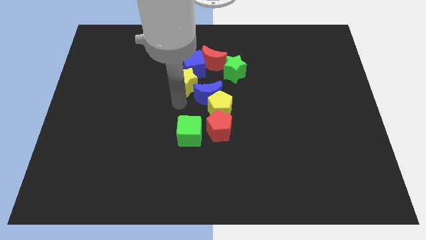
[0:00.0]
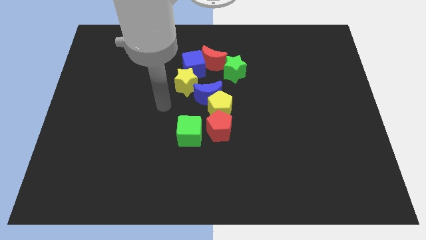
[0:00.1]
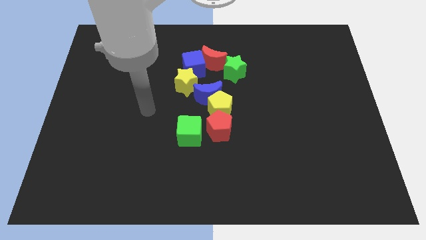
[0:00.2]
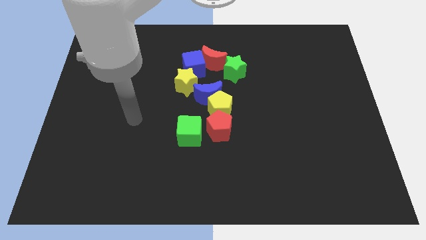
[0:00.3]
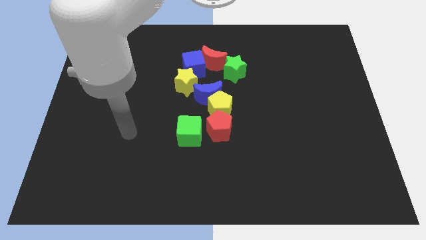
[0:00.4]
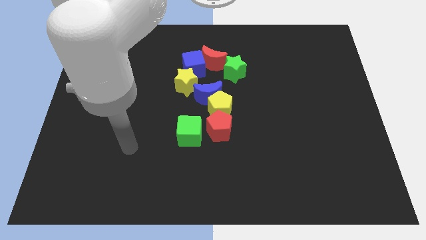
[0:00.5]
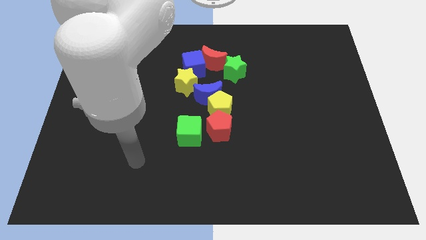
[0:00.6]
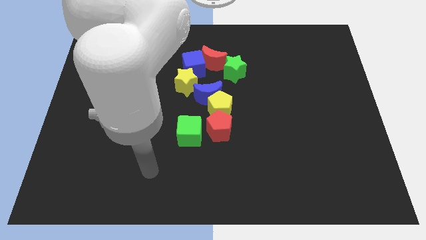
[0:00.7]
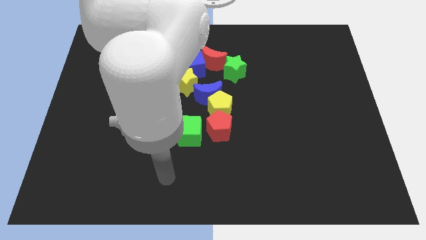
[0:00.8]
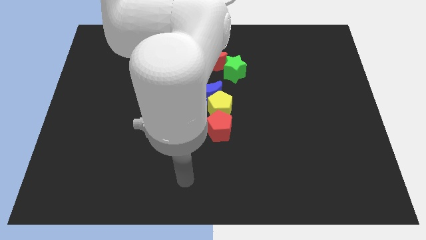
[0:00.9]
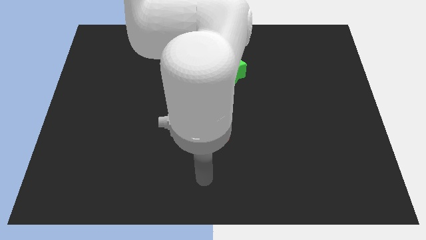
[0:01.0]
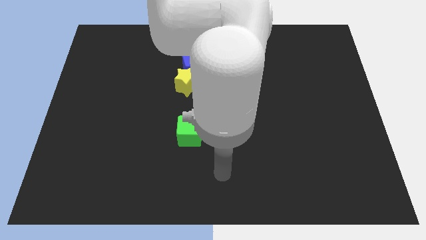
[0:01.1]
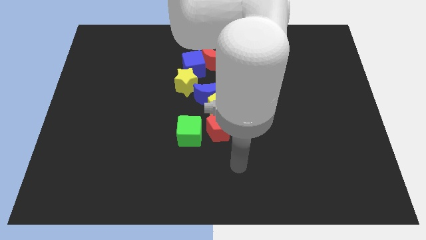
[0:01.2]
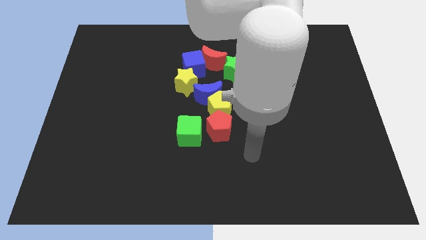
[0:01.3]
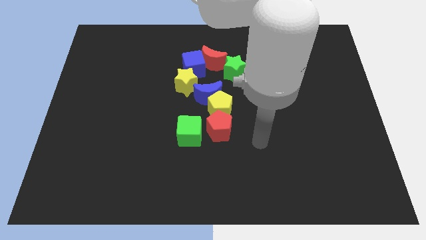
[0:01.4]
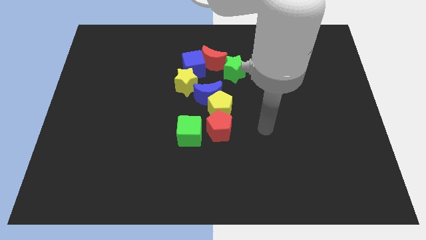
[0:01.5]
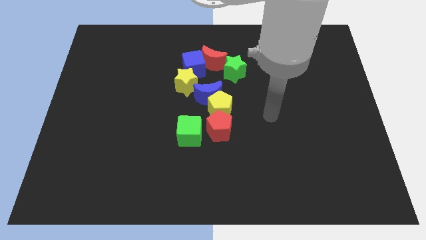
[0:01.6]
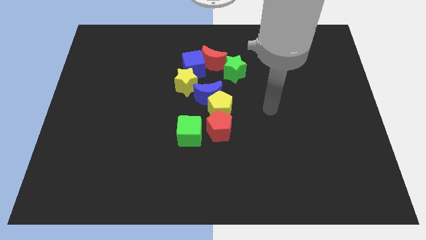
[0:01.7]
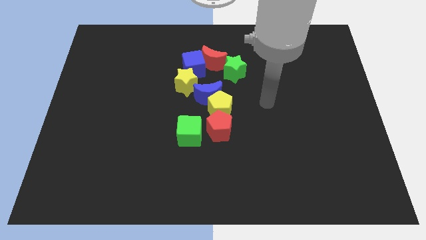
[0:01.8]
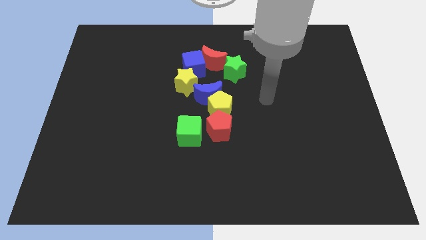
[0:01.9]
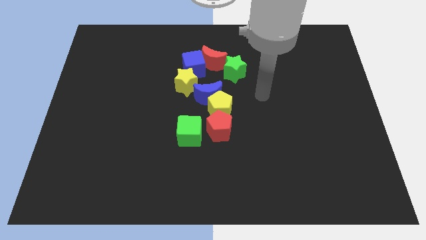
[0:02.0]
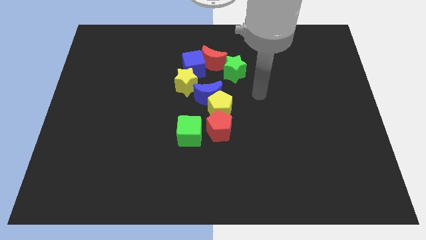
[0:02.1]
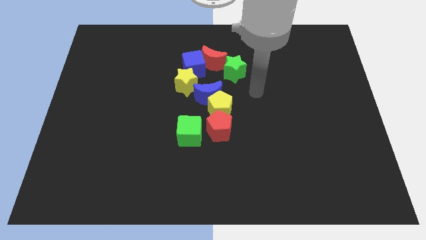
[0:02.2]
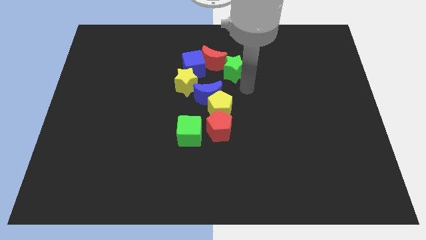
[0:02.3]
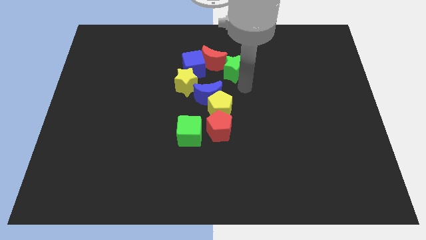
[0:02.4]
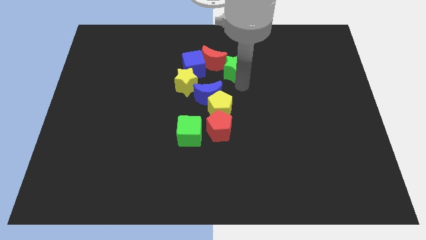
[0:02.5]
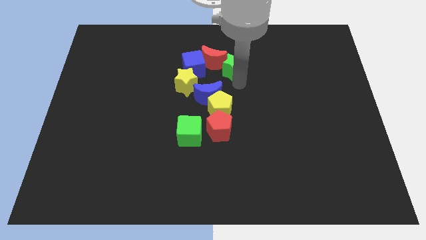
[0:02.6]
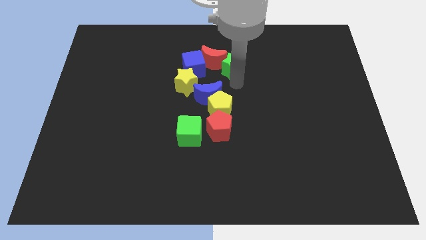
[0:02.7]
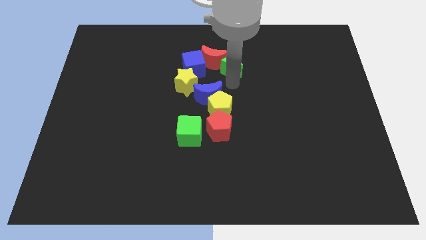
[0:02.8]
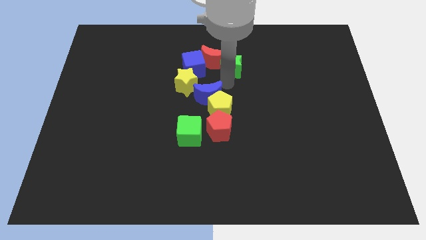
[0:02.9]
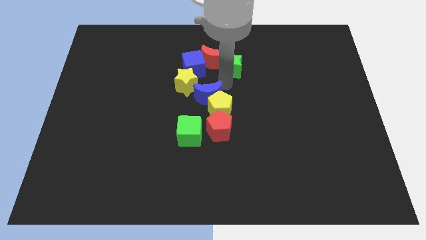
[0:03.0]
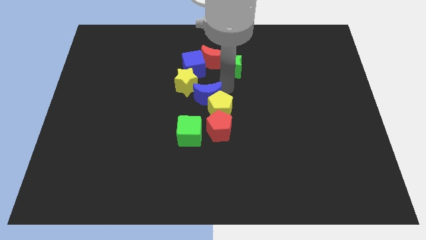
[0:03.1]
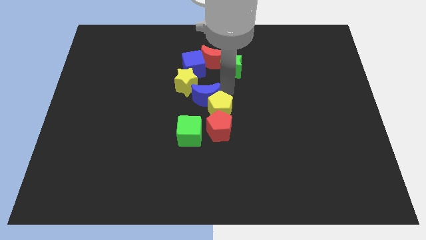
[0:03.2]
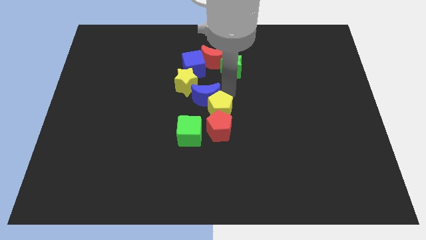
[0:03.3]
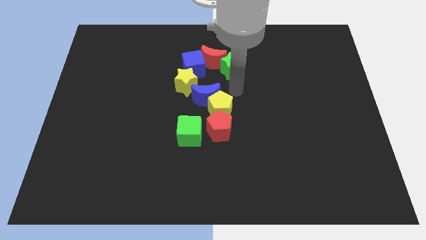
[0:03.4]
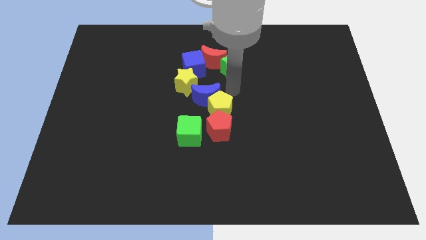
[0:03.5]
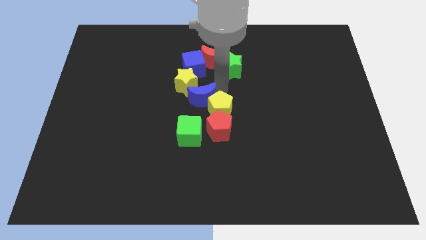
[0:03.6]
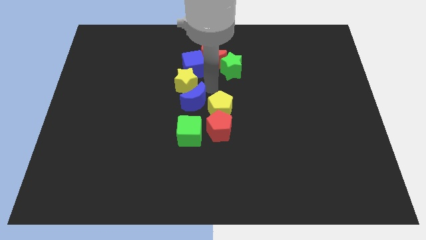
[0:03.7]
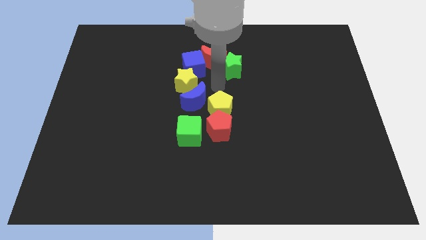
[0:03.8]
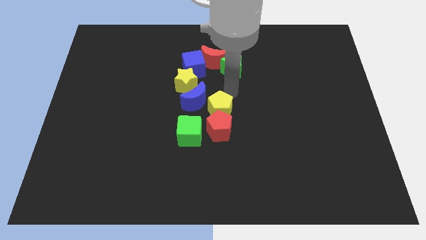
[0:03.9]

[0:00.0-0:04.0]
push the blue crescent towards bottom of the yellow star

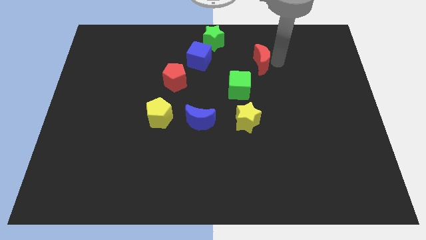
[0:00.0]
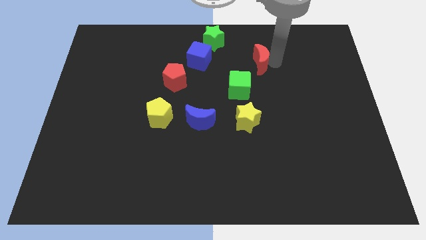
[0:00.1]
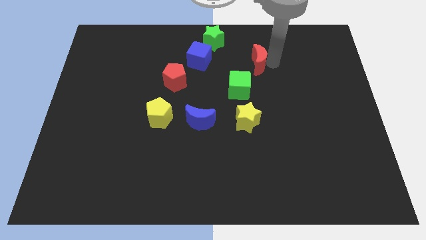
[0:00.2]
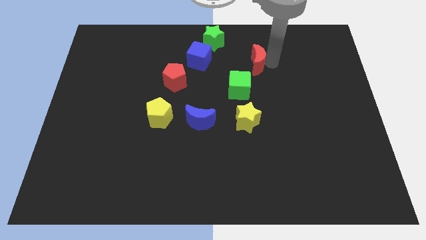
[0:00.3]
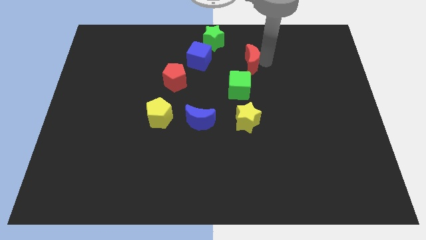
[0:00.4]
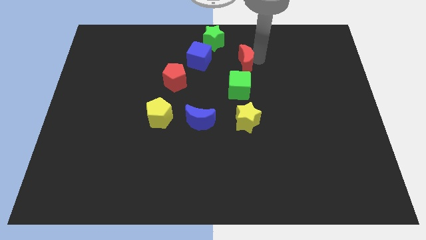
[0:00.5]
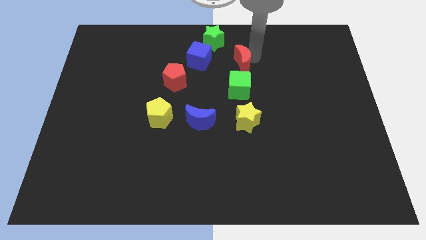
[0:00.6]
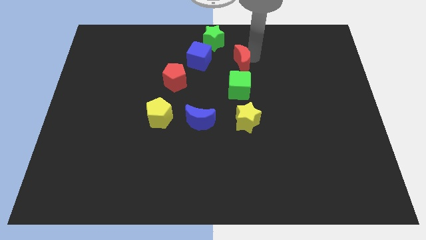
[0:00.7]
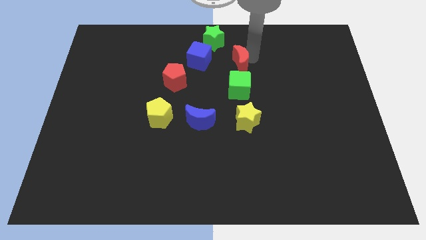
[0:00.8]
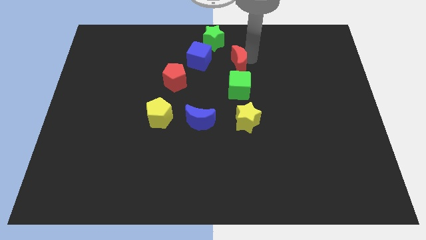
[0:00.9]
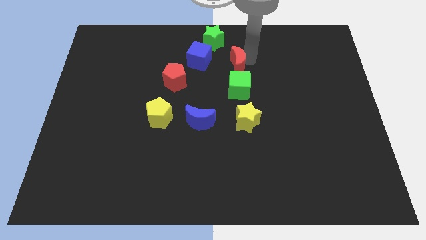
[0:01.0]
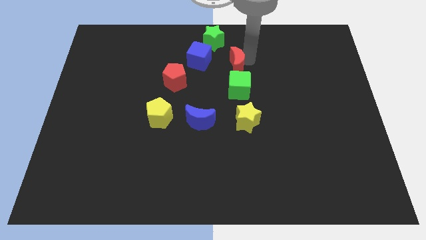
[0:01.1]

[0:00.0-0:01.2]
place the red moon above the green cube

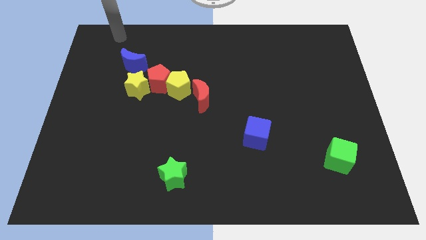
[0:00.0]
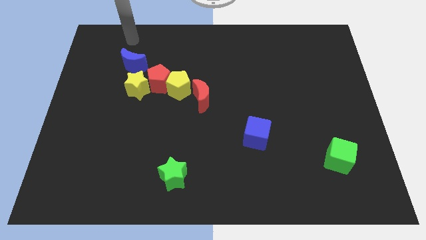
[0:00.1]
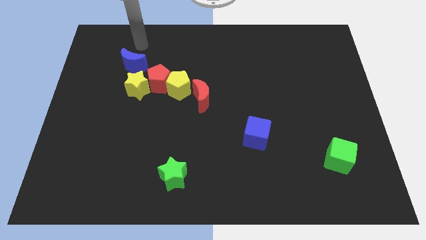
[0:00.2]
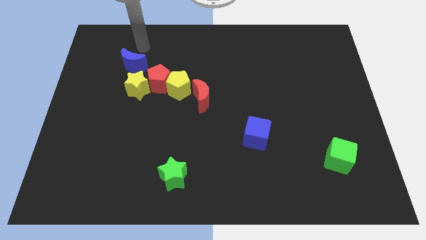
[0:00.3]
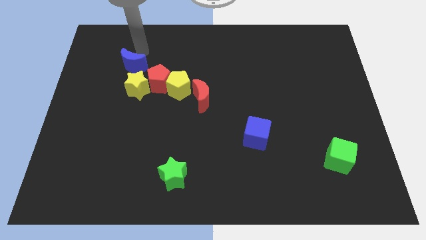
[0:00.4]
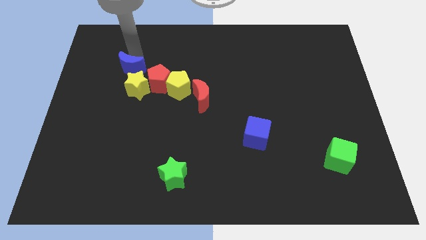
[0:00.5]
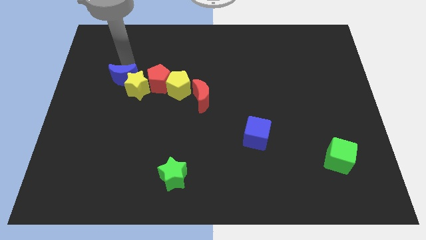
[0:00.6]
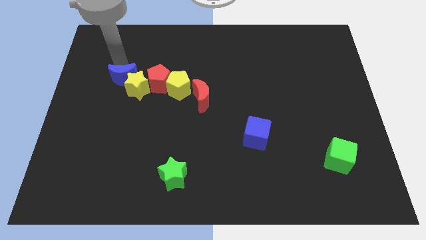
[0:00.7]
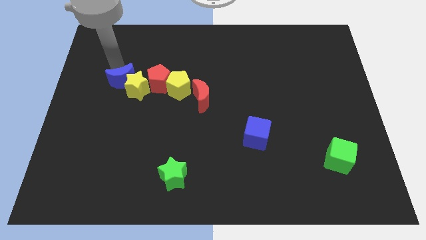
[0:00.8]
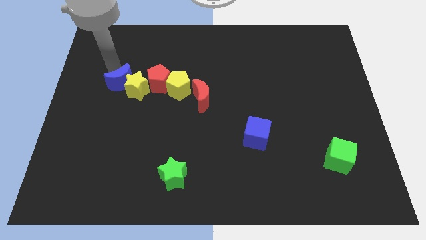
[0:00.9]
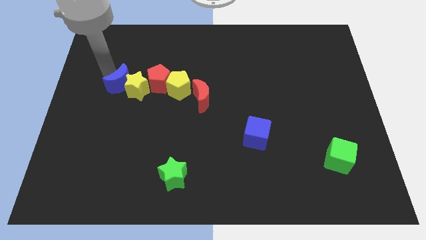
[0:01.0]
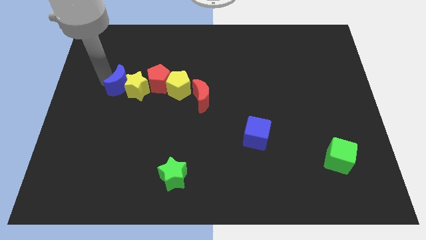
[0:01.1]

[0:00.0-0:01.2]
push blue moon into yellow star

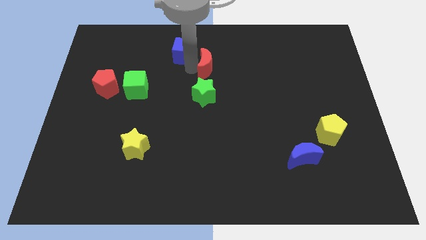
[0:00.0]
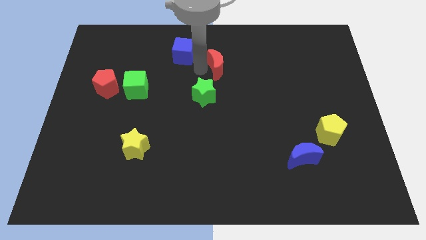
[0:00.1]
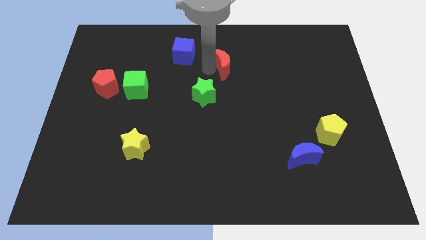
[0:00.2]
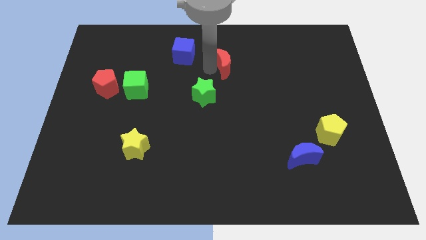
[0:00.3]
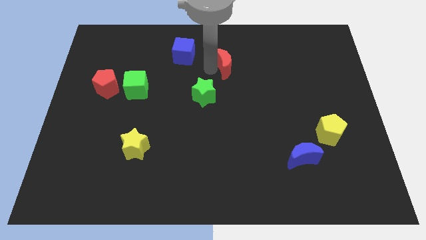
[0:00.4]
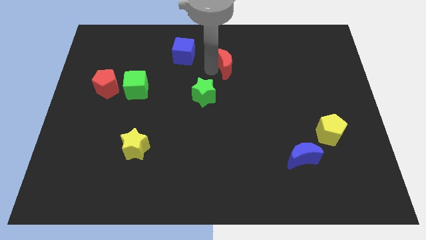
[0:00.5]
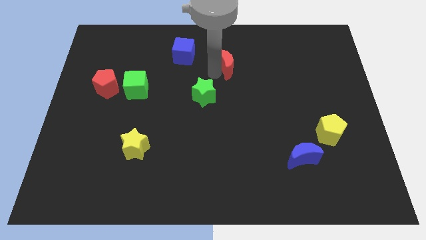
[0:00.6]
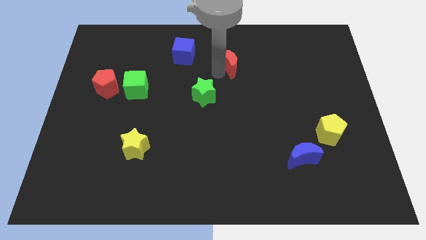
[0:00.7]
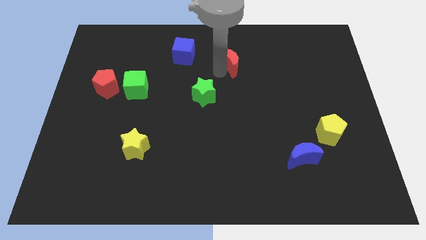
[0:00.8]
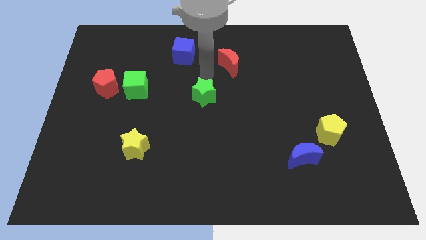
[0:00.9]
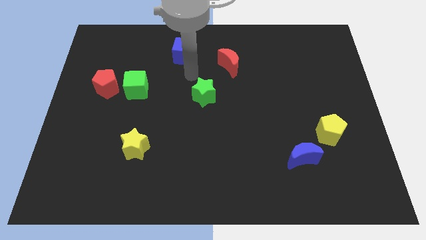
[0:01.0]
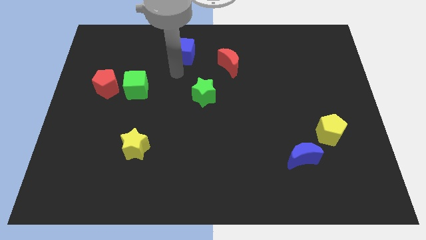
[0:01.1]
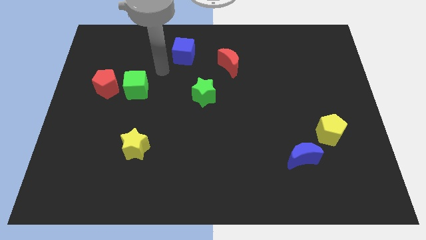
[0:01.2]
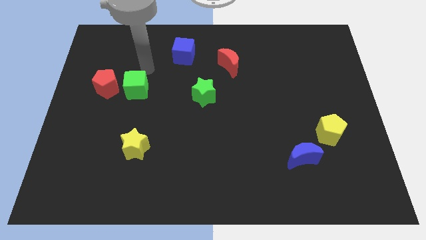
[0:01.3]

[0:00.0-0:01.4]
place the red moon diagonal to the green star

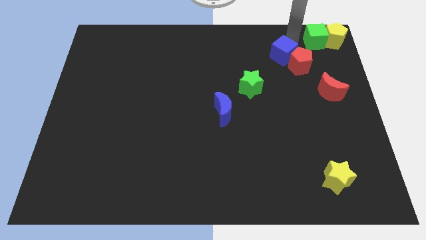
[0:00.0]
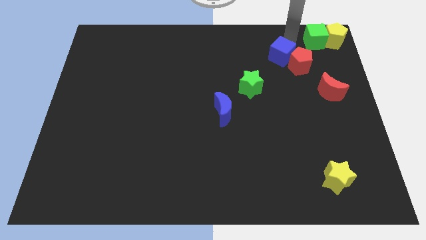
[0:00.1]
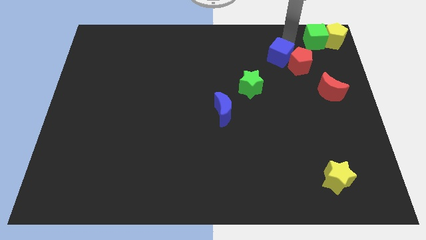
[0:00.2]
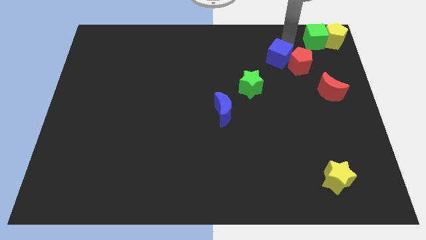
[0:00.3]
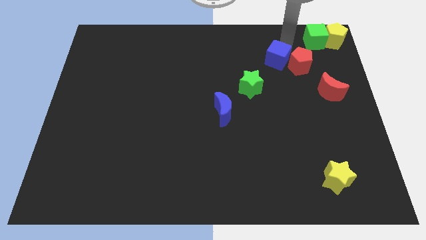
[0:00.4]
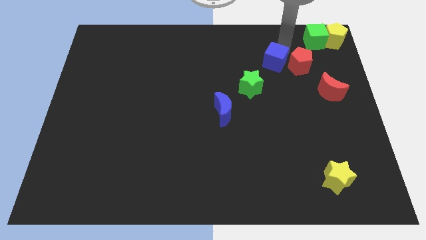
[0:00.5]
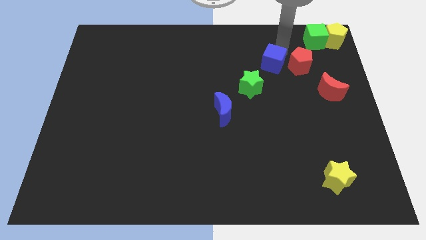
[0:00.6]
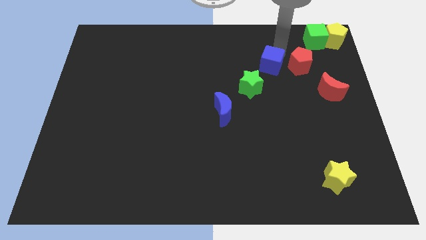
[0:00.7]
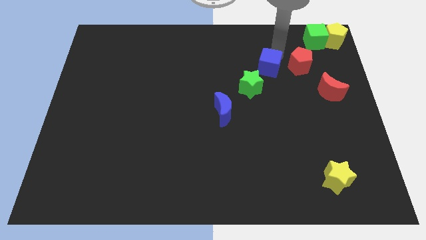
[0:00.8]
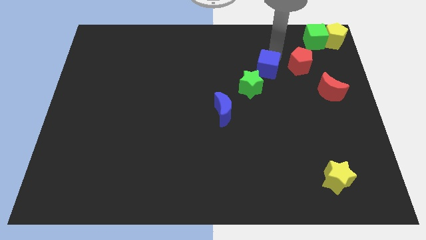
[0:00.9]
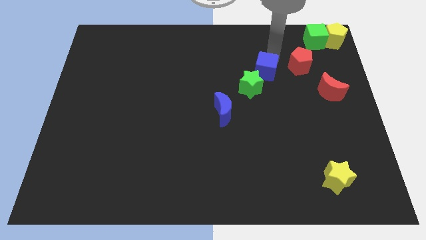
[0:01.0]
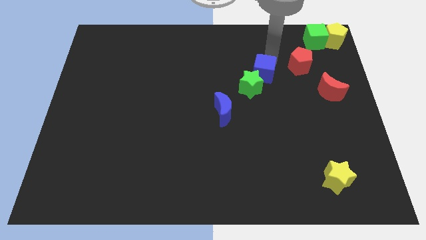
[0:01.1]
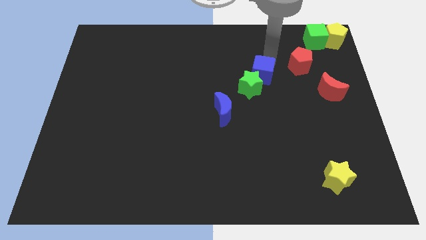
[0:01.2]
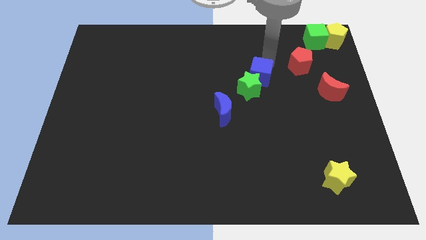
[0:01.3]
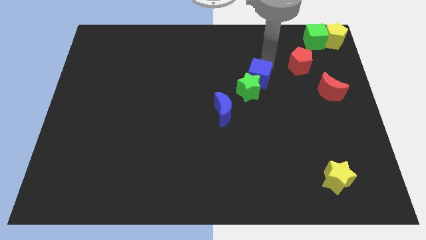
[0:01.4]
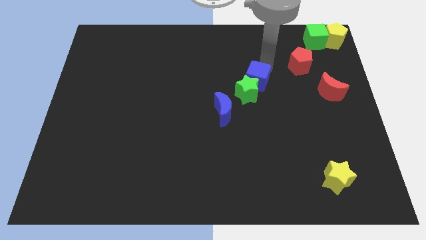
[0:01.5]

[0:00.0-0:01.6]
place the blue cube diagonal the green star
